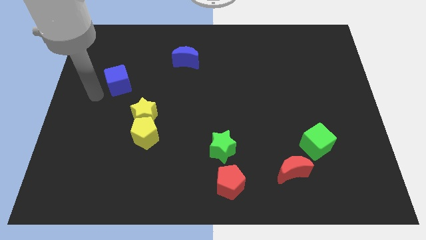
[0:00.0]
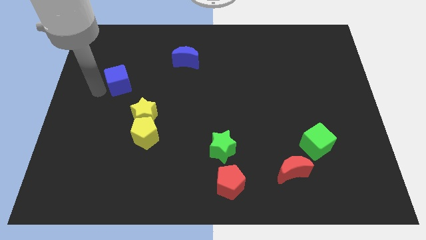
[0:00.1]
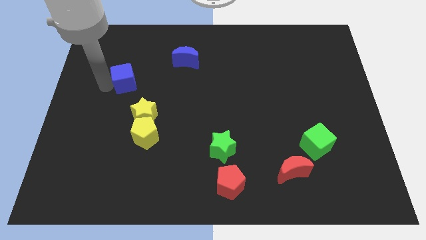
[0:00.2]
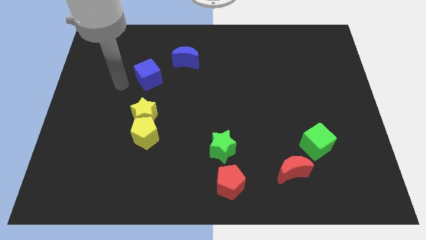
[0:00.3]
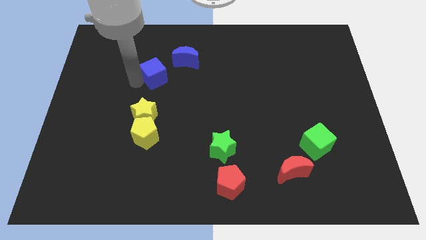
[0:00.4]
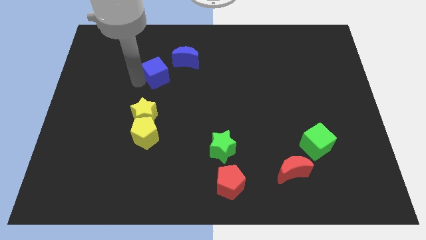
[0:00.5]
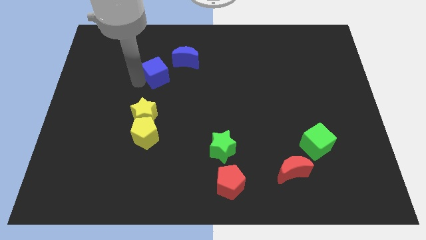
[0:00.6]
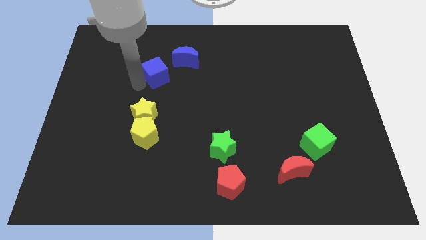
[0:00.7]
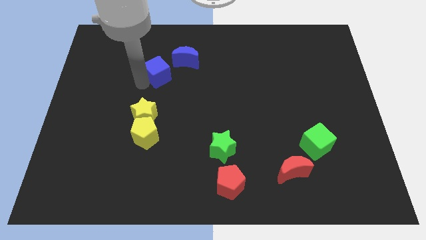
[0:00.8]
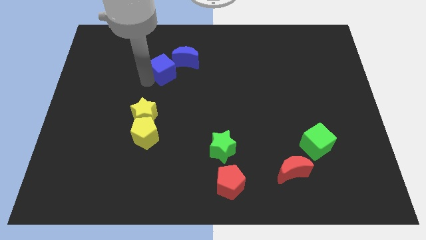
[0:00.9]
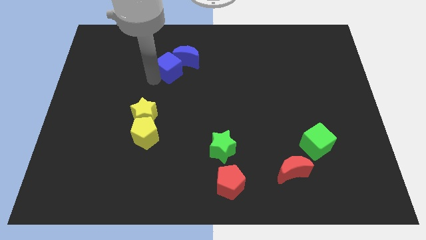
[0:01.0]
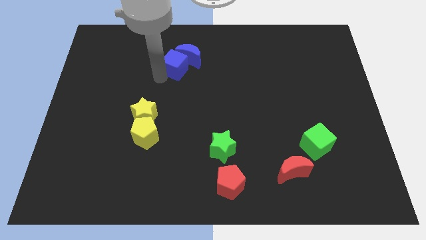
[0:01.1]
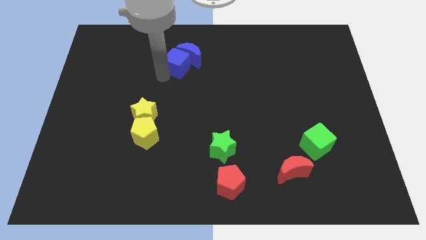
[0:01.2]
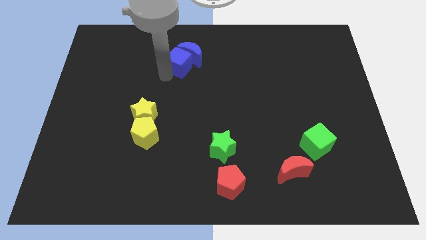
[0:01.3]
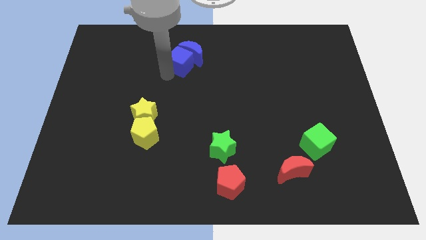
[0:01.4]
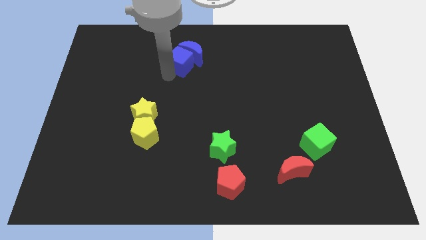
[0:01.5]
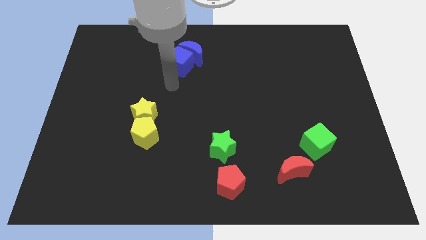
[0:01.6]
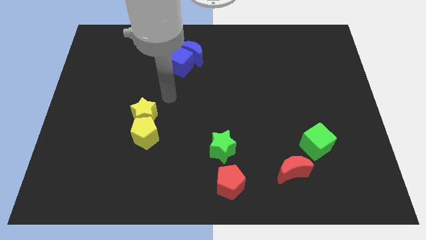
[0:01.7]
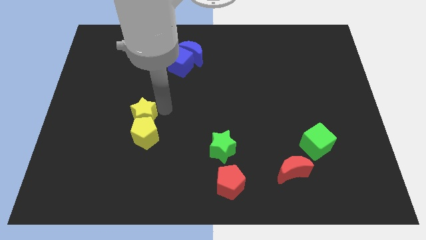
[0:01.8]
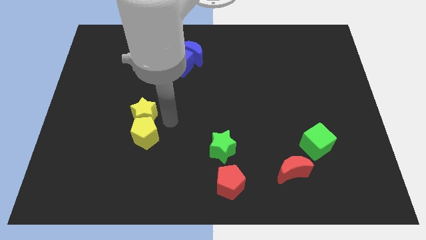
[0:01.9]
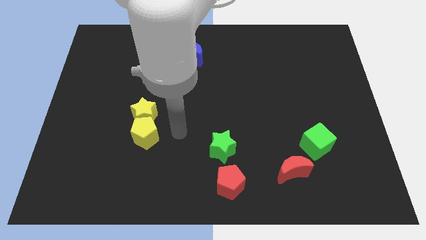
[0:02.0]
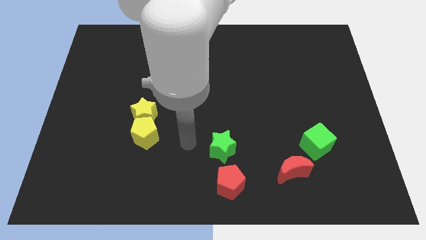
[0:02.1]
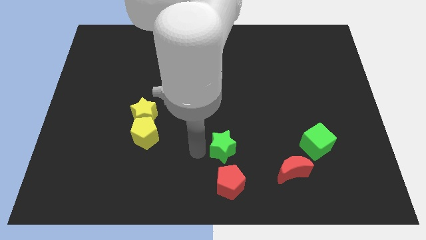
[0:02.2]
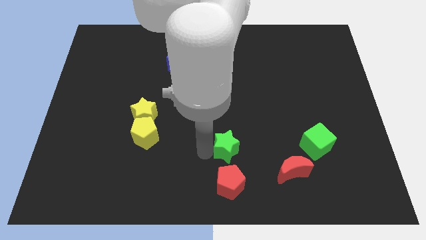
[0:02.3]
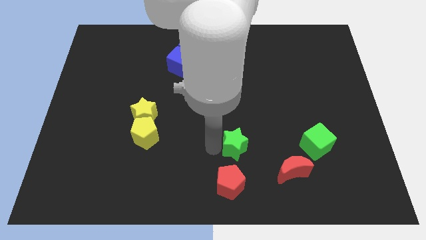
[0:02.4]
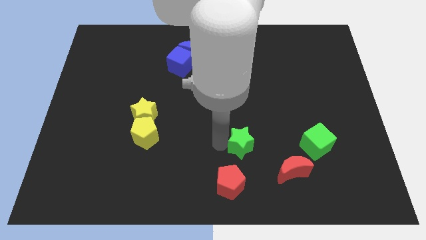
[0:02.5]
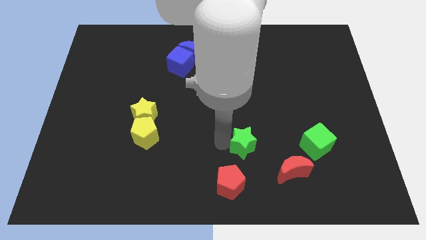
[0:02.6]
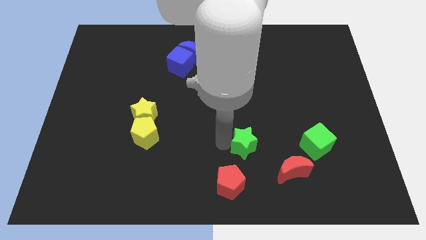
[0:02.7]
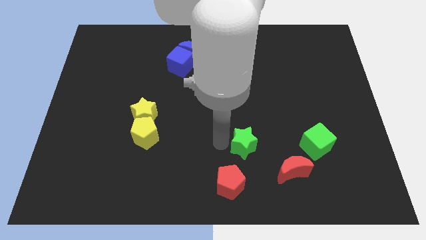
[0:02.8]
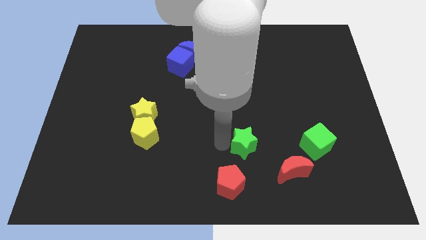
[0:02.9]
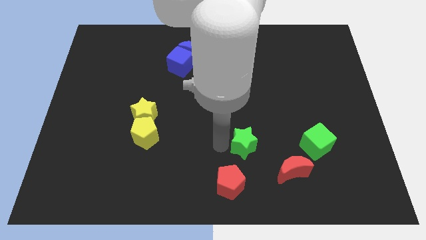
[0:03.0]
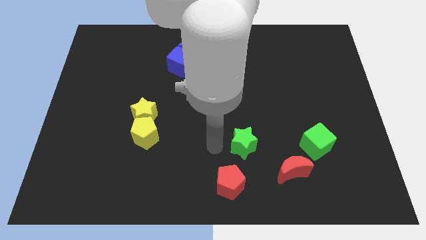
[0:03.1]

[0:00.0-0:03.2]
push the blue cube into the blue crescent

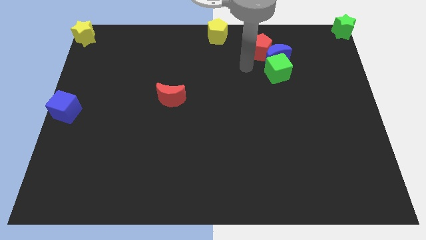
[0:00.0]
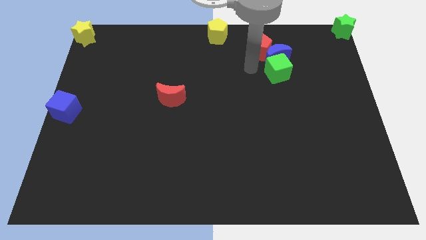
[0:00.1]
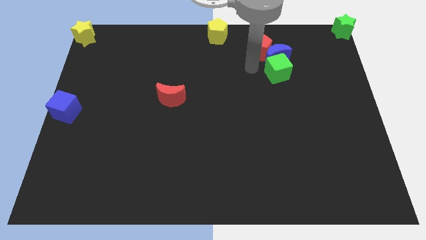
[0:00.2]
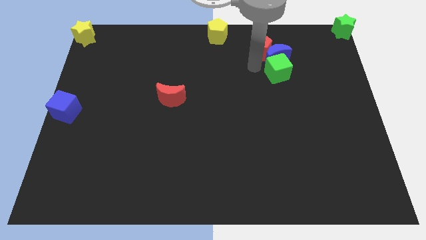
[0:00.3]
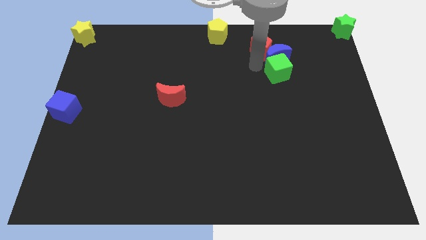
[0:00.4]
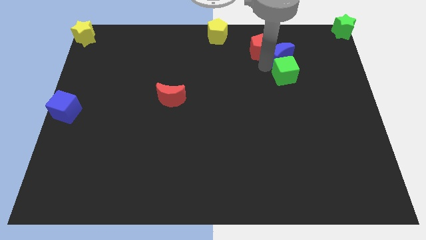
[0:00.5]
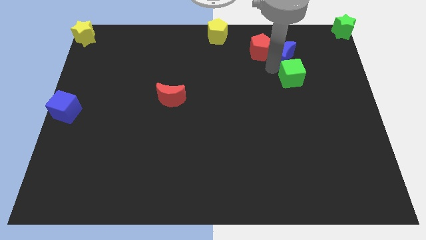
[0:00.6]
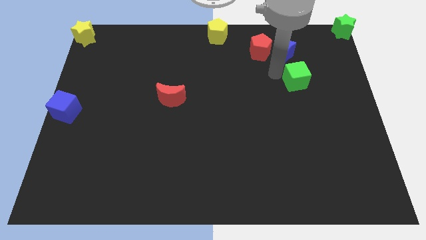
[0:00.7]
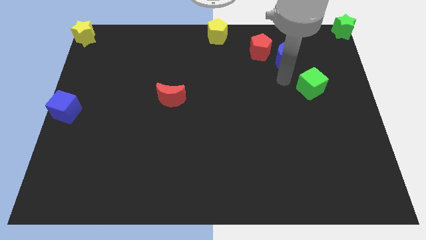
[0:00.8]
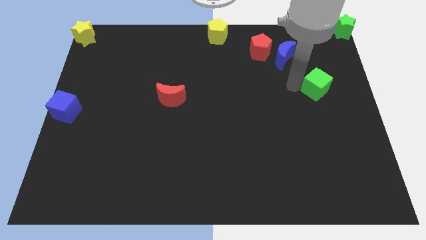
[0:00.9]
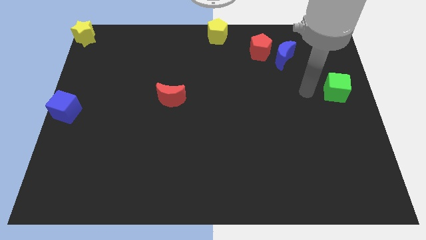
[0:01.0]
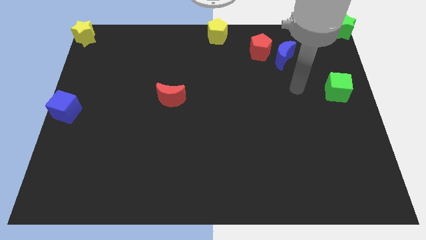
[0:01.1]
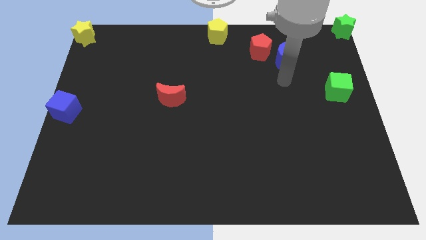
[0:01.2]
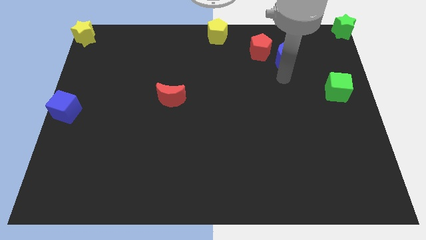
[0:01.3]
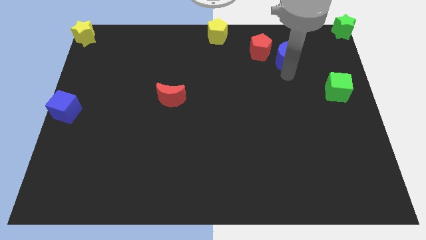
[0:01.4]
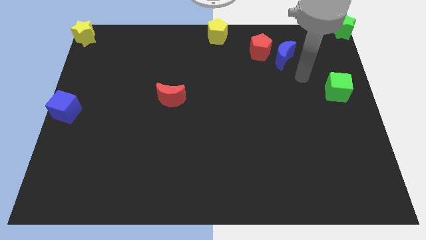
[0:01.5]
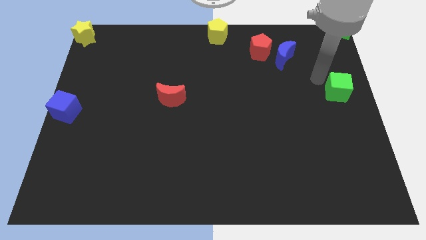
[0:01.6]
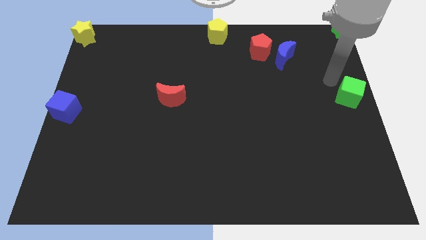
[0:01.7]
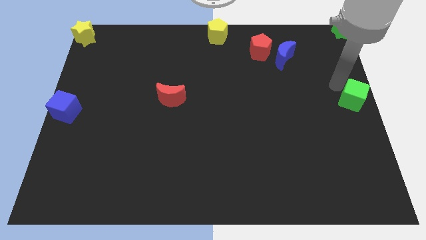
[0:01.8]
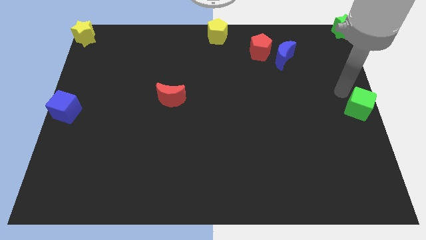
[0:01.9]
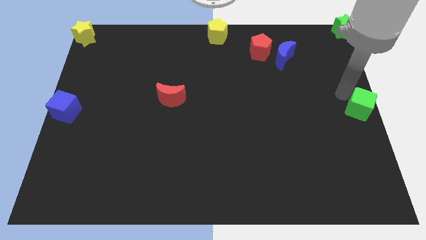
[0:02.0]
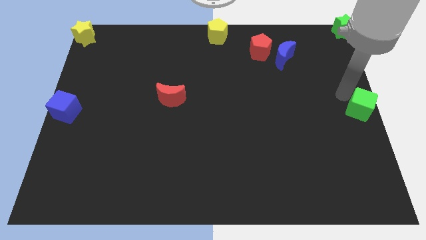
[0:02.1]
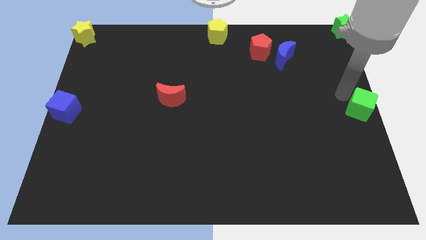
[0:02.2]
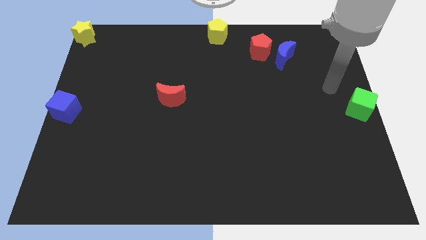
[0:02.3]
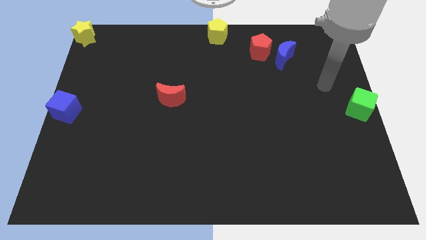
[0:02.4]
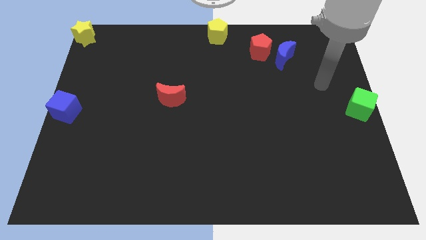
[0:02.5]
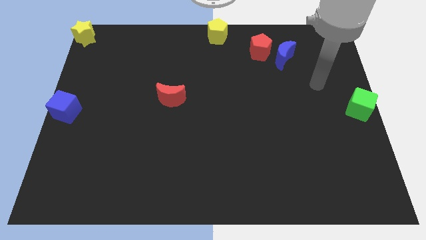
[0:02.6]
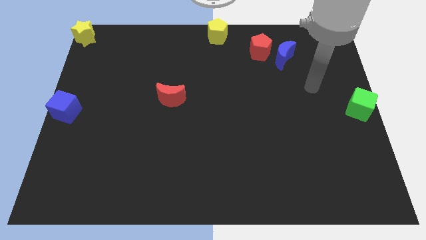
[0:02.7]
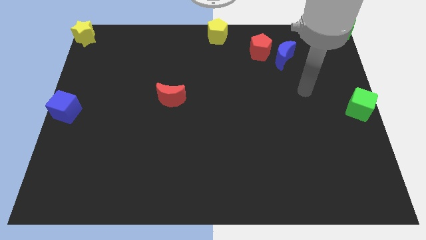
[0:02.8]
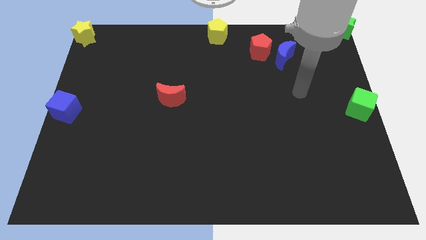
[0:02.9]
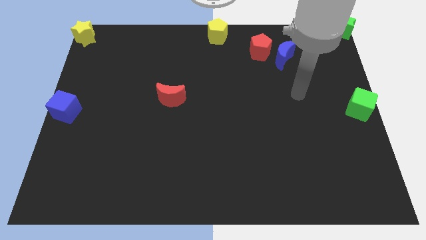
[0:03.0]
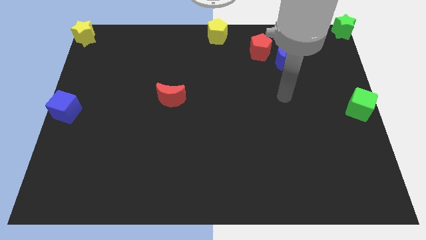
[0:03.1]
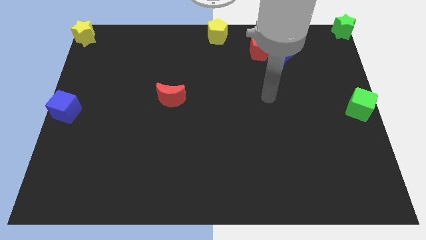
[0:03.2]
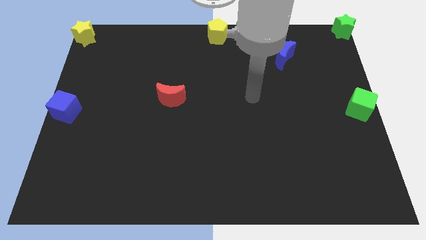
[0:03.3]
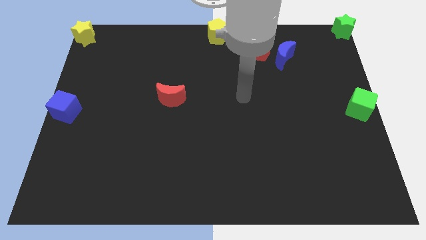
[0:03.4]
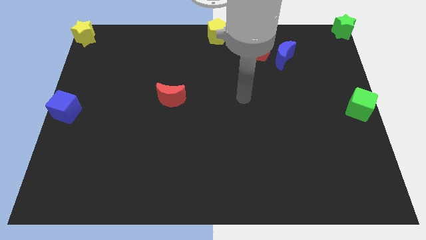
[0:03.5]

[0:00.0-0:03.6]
move the green cube at the center right of the board

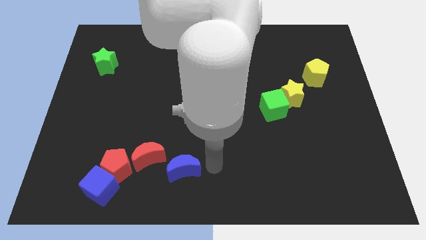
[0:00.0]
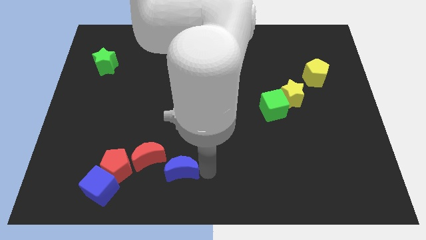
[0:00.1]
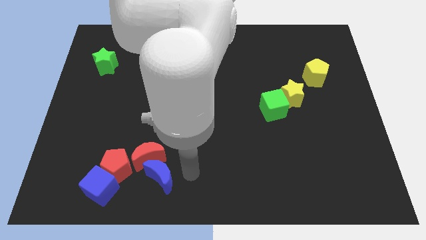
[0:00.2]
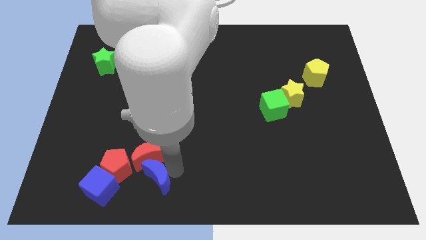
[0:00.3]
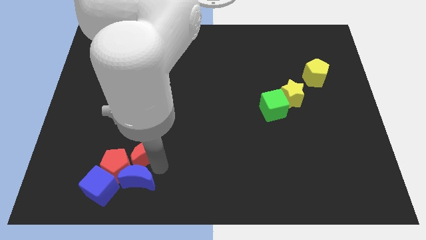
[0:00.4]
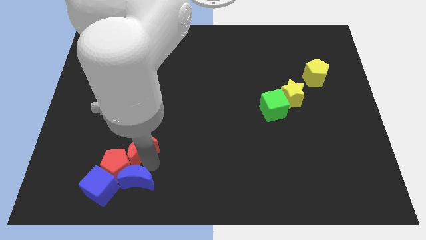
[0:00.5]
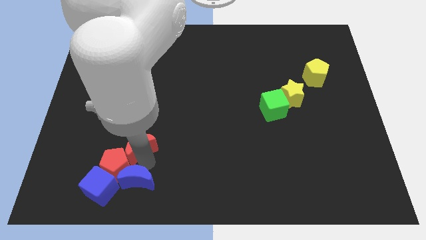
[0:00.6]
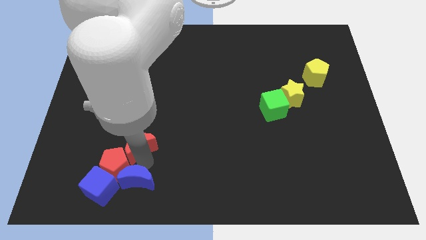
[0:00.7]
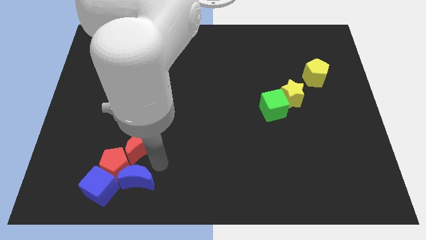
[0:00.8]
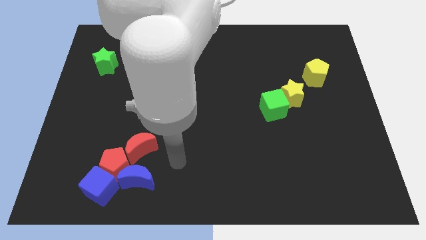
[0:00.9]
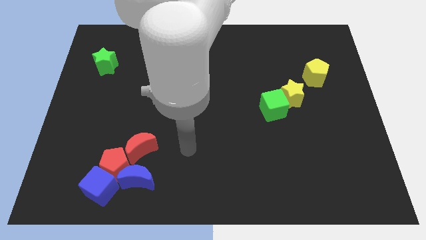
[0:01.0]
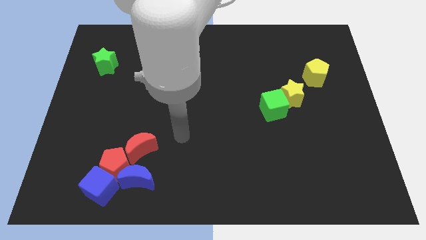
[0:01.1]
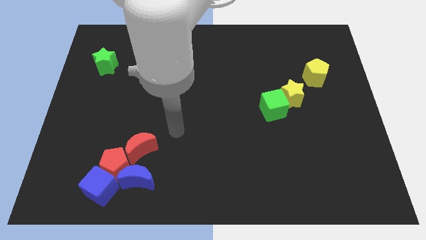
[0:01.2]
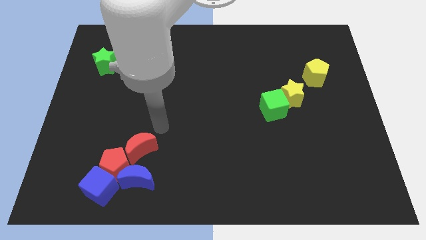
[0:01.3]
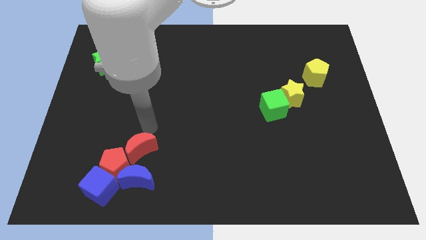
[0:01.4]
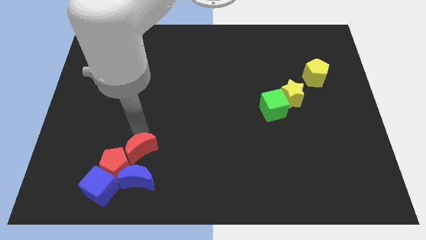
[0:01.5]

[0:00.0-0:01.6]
place your arm at the top of red moon

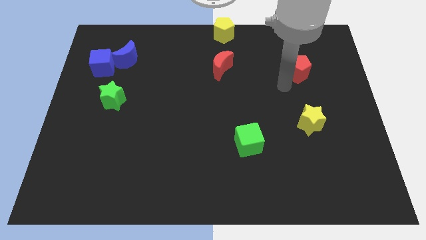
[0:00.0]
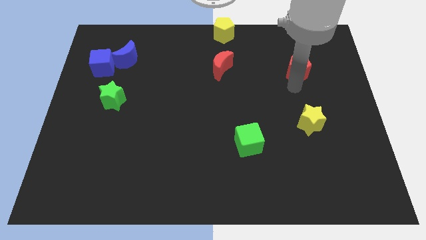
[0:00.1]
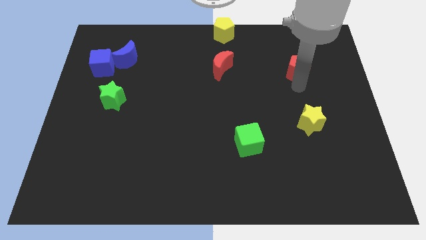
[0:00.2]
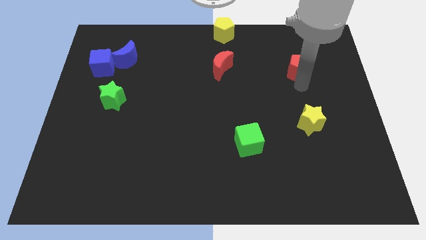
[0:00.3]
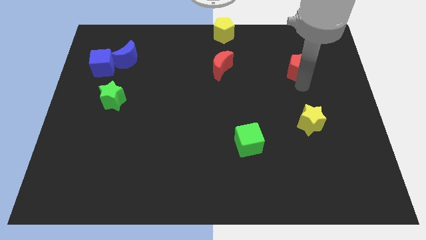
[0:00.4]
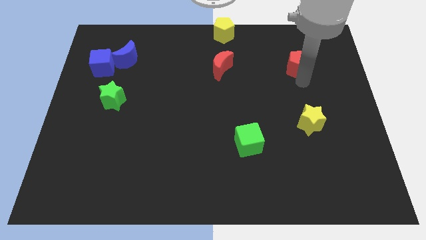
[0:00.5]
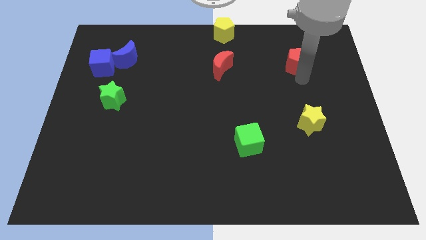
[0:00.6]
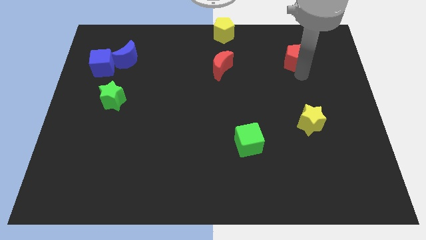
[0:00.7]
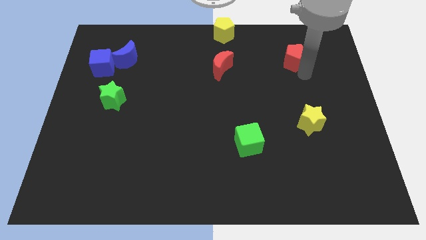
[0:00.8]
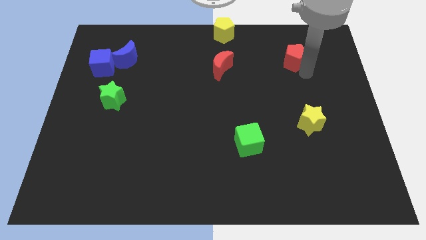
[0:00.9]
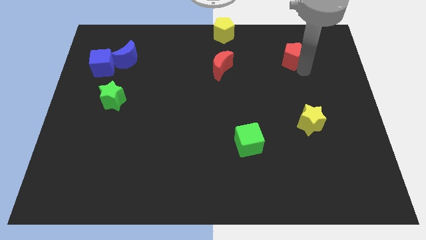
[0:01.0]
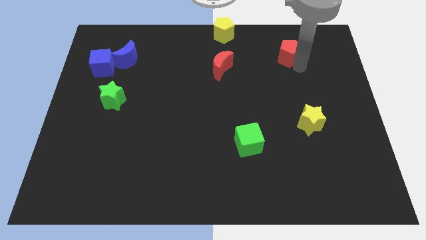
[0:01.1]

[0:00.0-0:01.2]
move the red pentagon to the top of the board
